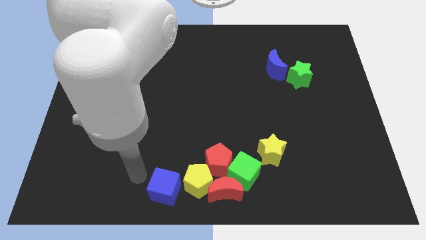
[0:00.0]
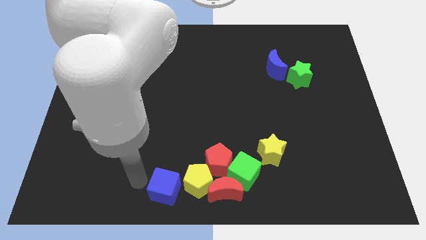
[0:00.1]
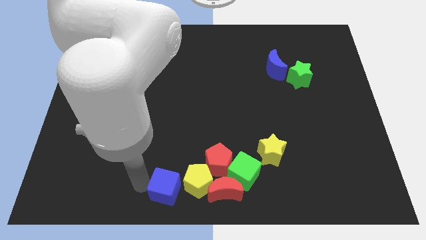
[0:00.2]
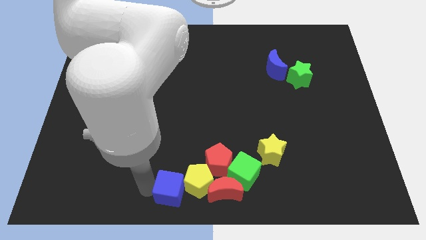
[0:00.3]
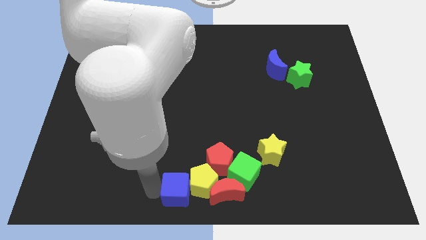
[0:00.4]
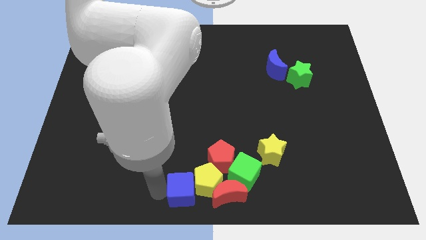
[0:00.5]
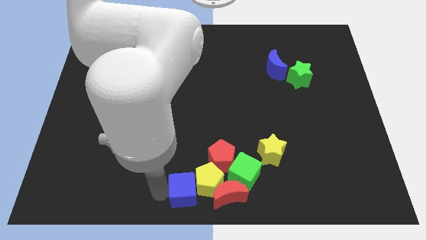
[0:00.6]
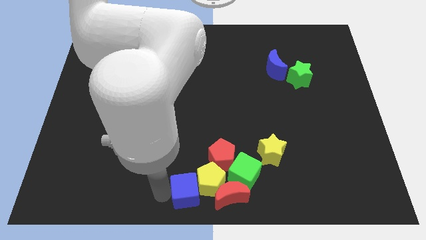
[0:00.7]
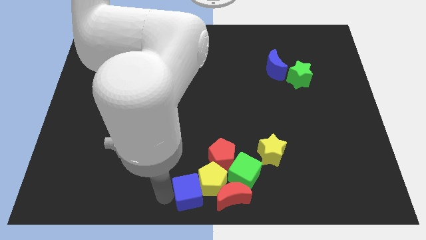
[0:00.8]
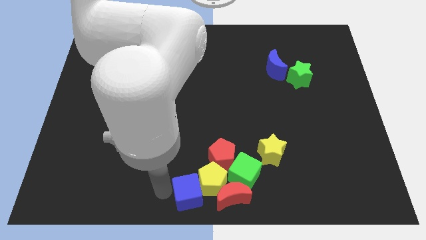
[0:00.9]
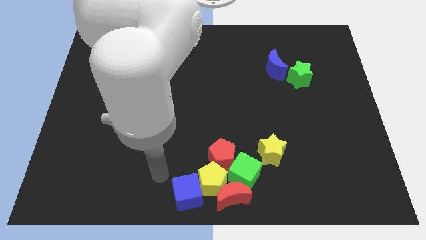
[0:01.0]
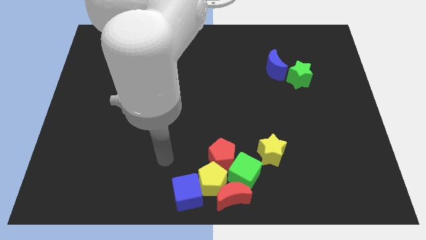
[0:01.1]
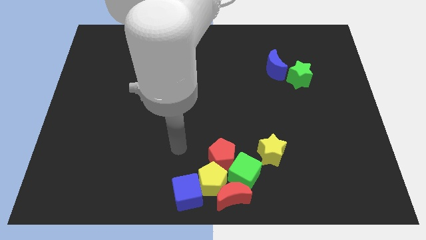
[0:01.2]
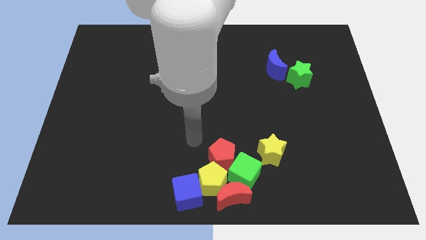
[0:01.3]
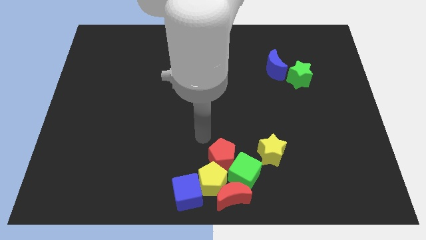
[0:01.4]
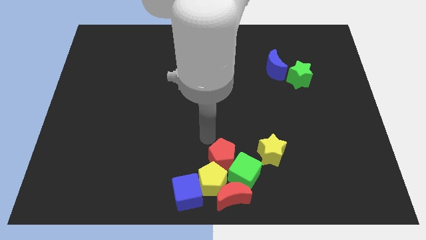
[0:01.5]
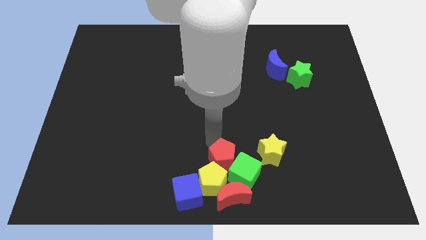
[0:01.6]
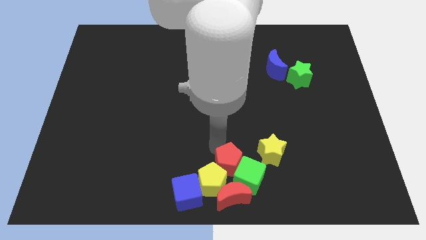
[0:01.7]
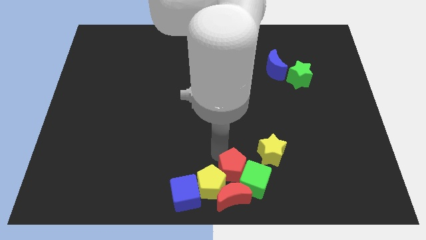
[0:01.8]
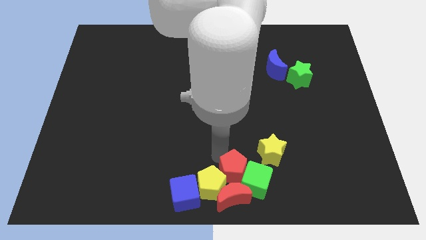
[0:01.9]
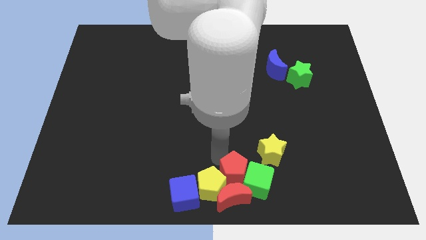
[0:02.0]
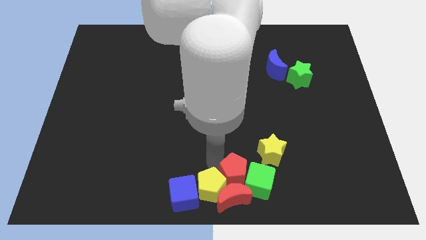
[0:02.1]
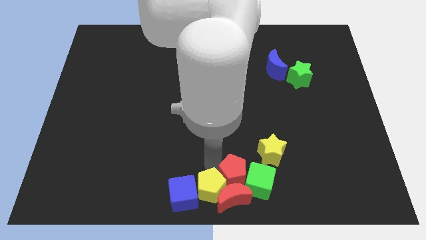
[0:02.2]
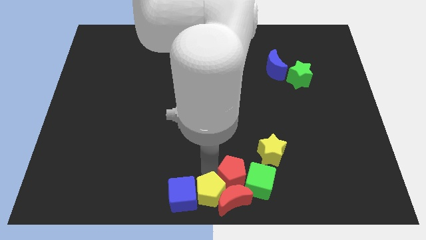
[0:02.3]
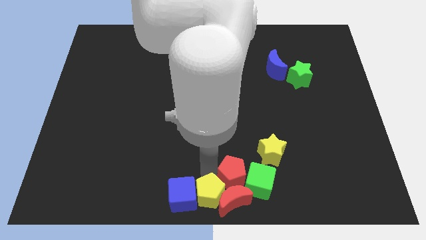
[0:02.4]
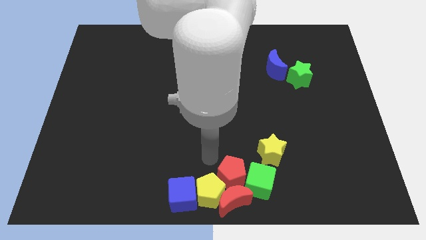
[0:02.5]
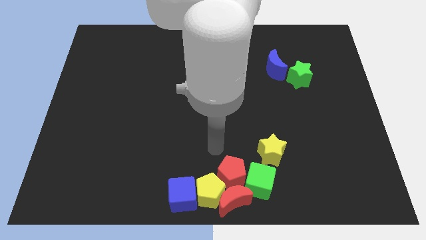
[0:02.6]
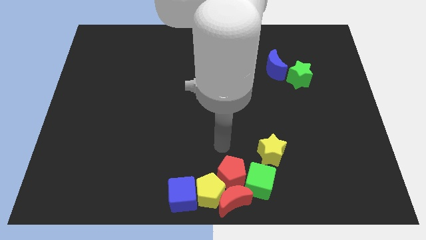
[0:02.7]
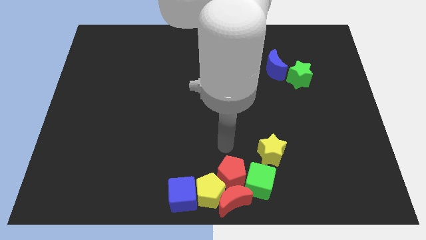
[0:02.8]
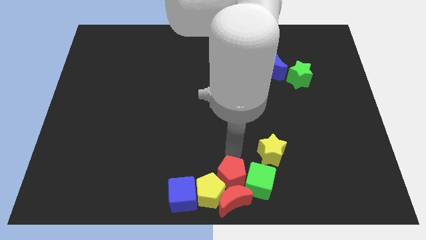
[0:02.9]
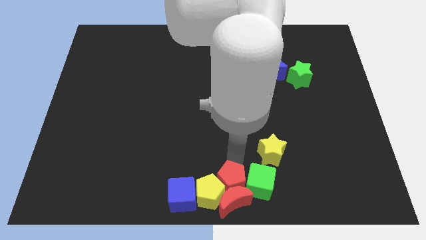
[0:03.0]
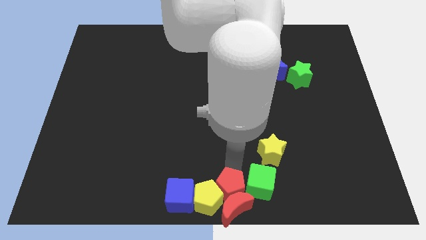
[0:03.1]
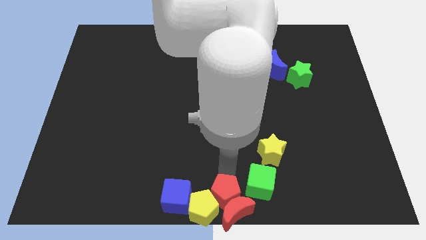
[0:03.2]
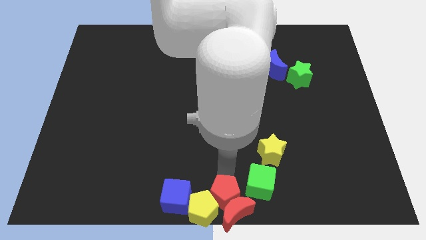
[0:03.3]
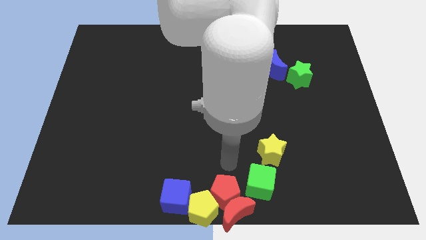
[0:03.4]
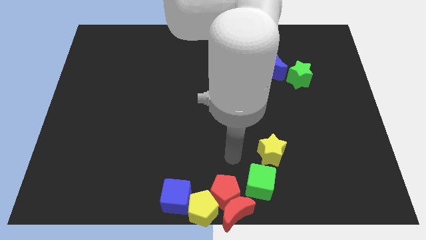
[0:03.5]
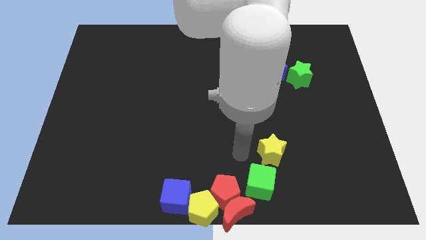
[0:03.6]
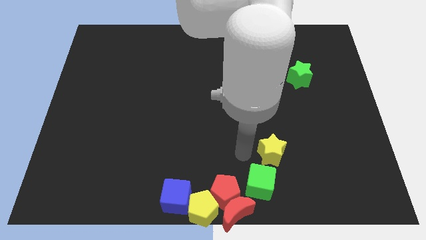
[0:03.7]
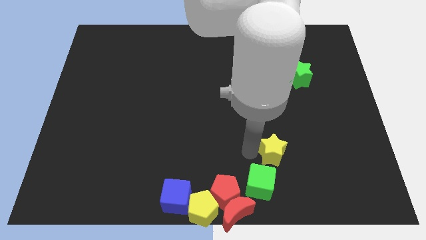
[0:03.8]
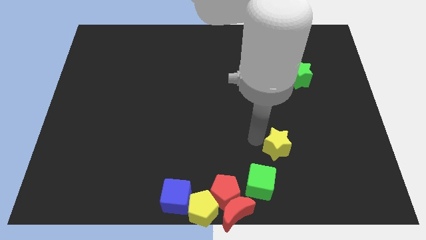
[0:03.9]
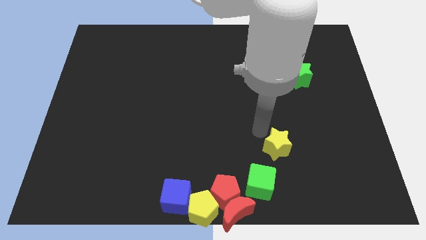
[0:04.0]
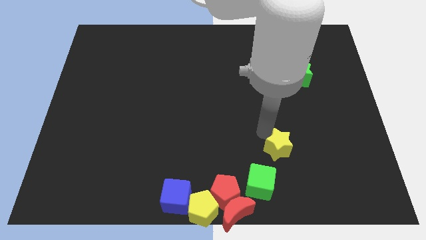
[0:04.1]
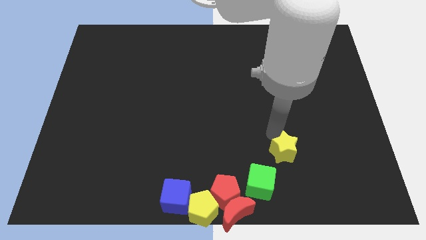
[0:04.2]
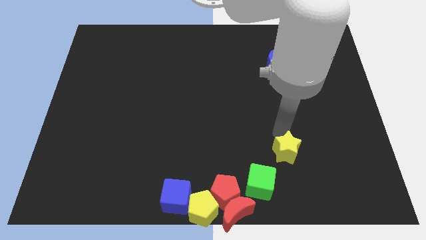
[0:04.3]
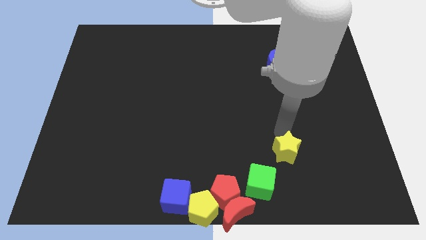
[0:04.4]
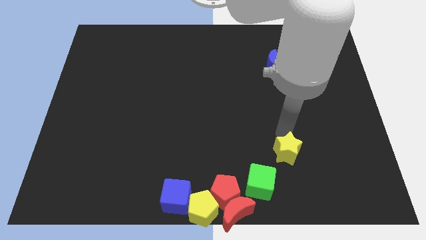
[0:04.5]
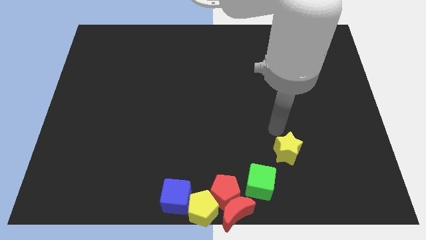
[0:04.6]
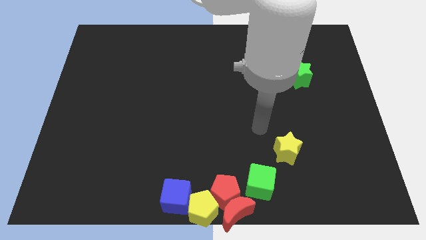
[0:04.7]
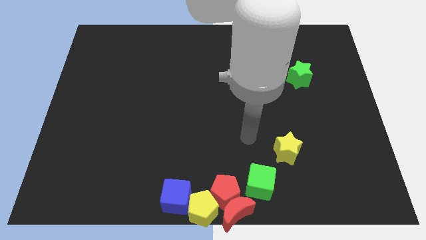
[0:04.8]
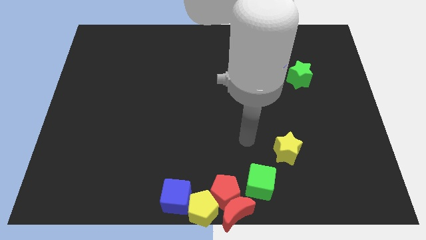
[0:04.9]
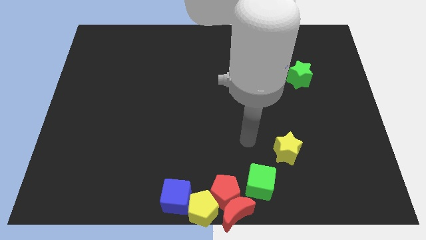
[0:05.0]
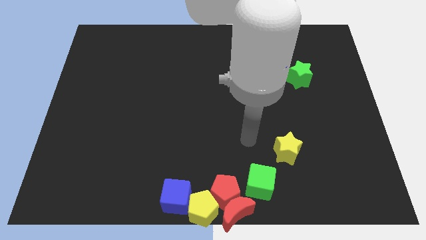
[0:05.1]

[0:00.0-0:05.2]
push group of blocks to the bottom center of the board

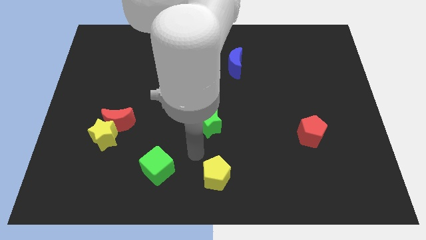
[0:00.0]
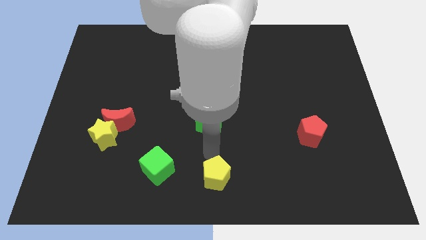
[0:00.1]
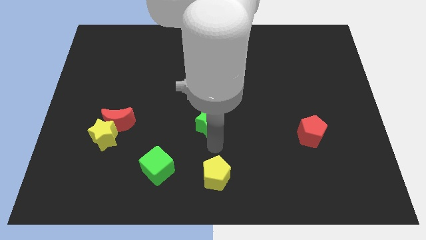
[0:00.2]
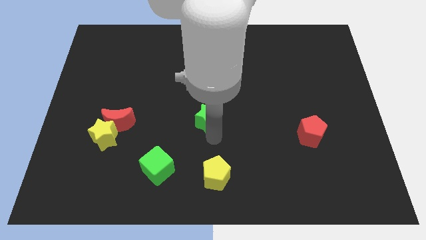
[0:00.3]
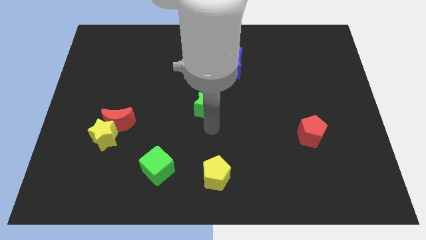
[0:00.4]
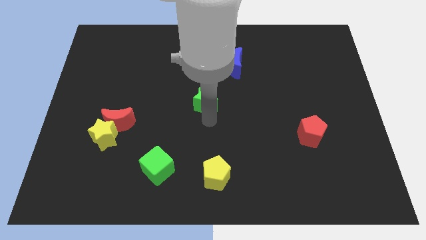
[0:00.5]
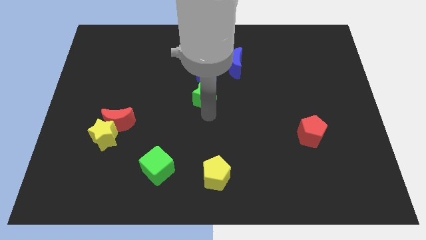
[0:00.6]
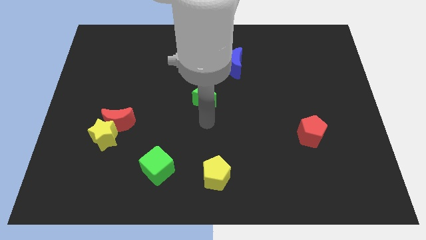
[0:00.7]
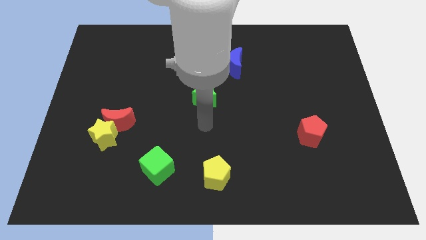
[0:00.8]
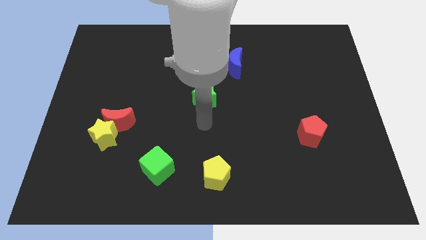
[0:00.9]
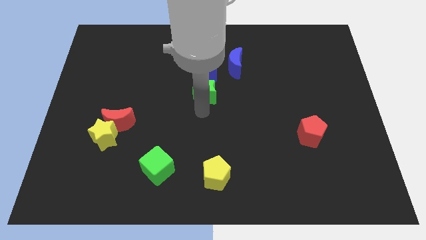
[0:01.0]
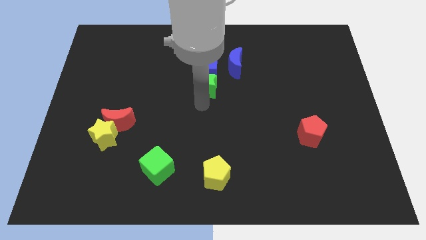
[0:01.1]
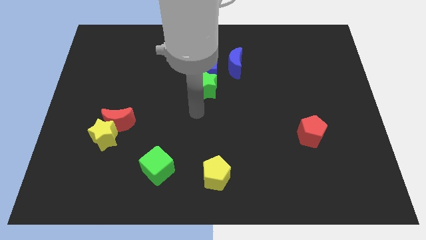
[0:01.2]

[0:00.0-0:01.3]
place the green star under the blue cube

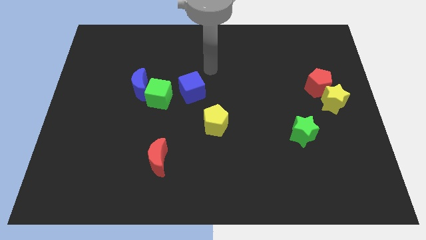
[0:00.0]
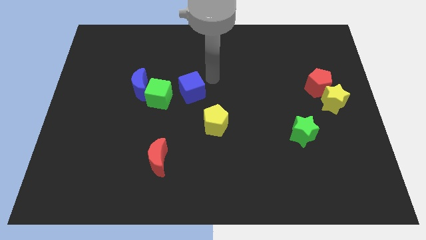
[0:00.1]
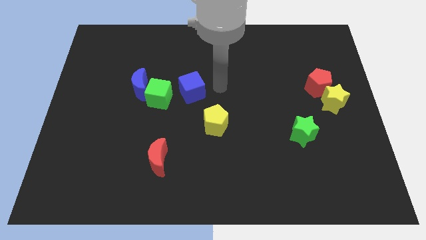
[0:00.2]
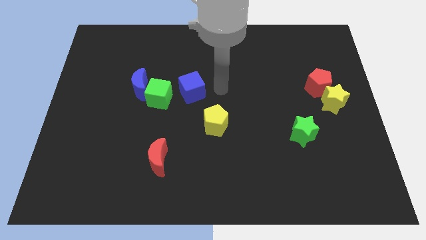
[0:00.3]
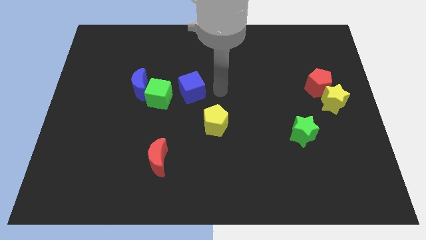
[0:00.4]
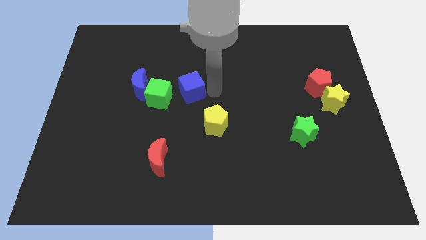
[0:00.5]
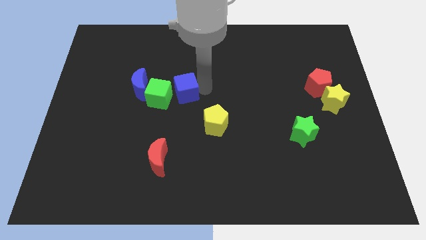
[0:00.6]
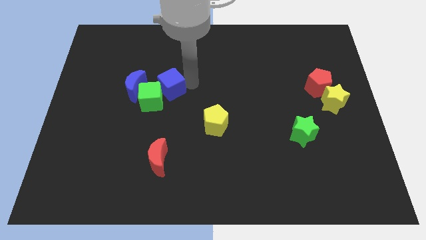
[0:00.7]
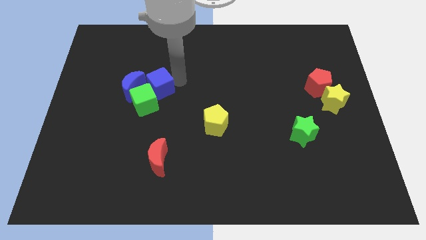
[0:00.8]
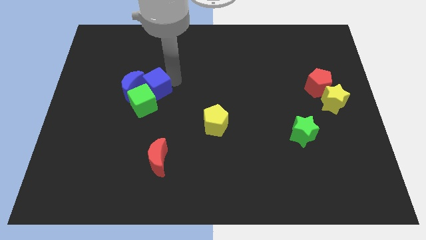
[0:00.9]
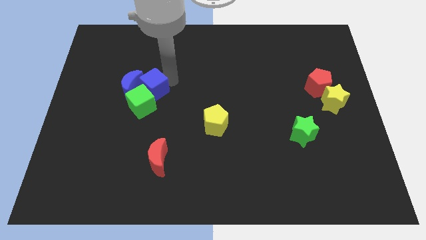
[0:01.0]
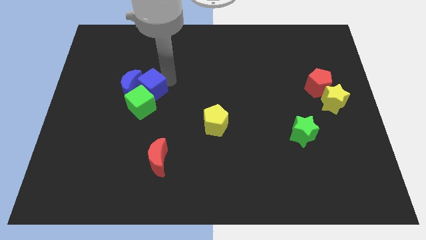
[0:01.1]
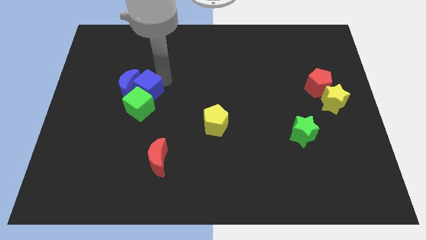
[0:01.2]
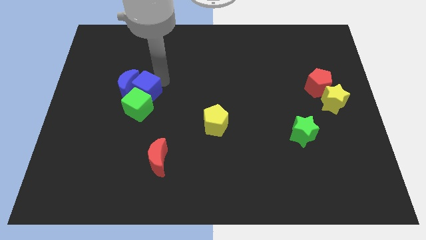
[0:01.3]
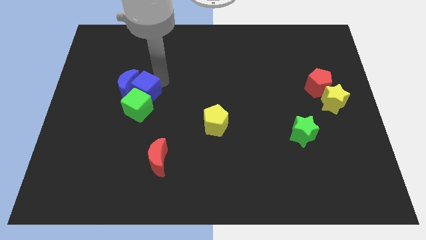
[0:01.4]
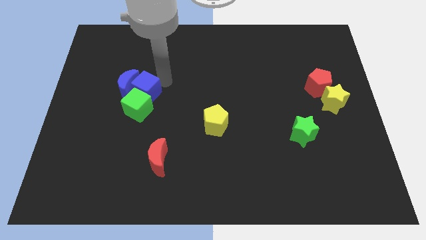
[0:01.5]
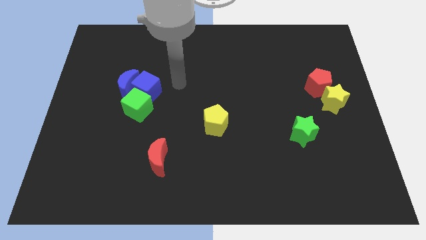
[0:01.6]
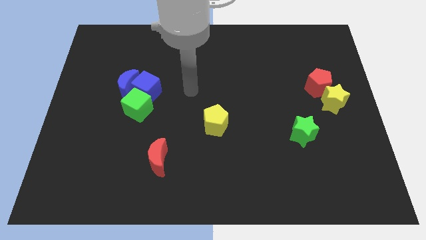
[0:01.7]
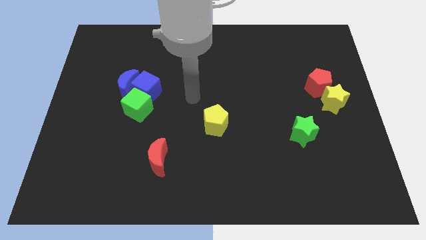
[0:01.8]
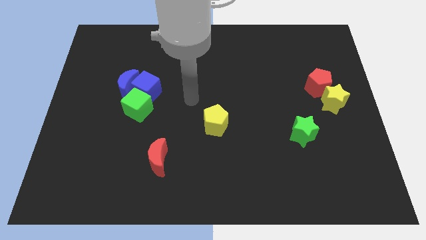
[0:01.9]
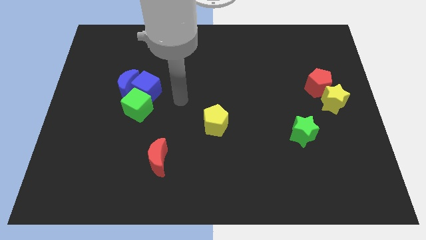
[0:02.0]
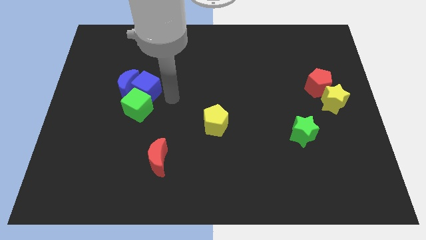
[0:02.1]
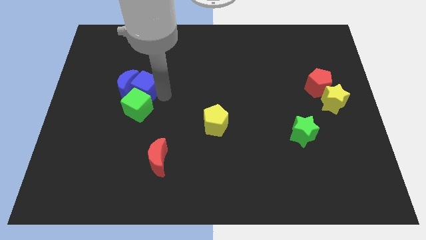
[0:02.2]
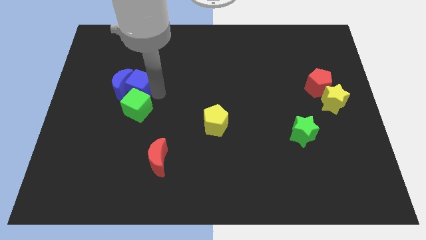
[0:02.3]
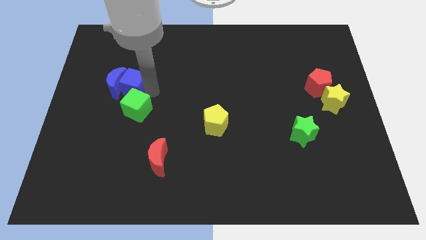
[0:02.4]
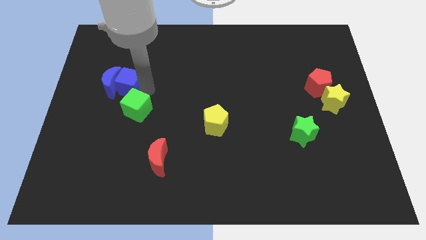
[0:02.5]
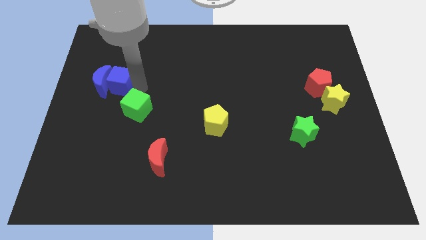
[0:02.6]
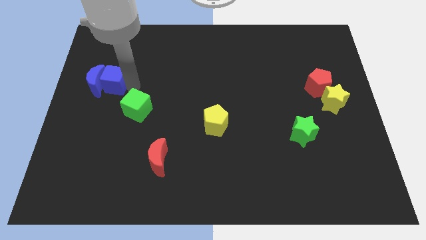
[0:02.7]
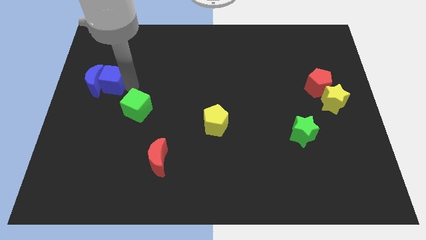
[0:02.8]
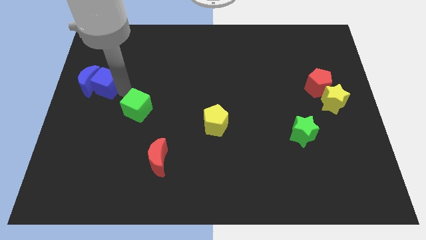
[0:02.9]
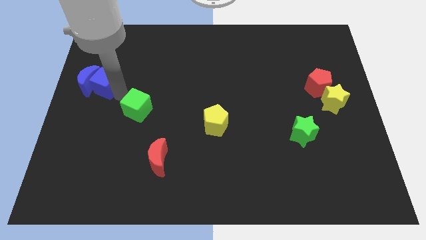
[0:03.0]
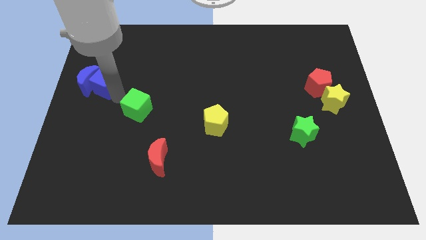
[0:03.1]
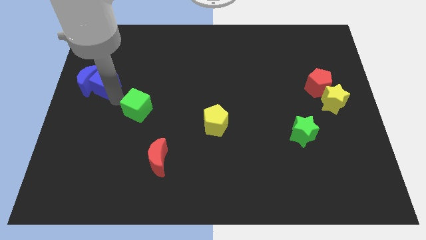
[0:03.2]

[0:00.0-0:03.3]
place your arm in between the blue cube and green cube
